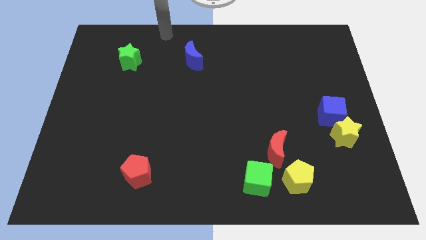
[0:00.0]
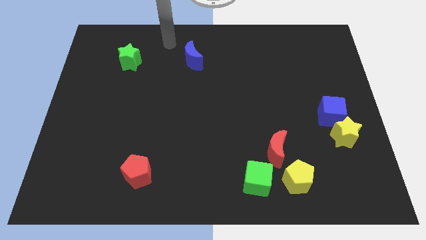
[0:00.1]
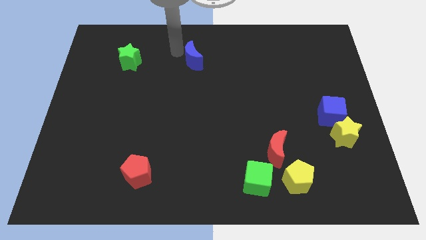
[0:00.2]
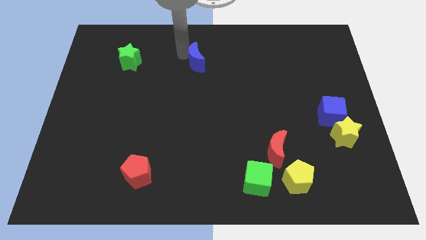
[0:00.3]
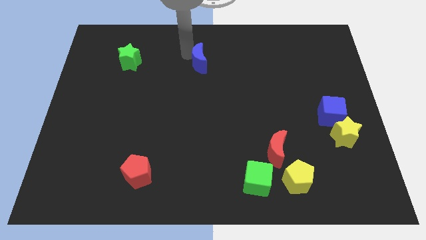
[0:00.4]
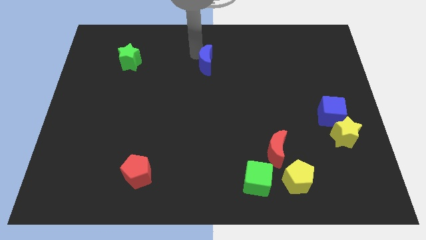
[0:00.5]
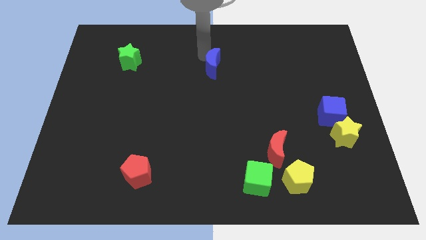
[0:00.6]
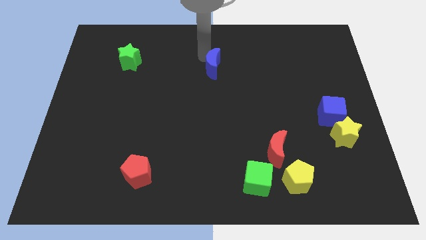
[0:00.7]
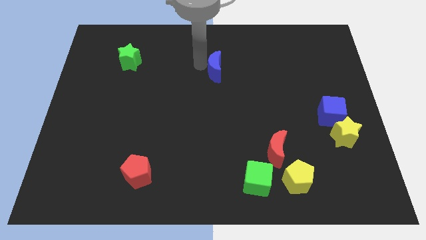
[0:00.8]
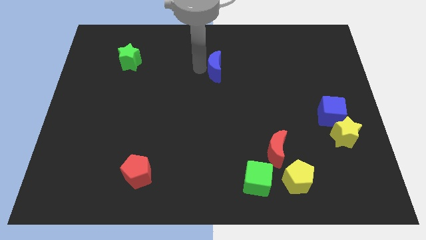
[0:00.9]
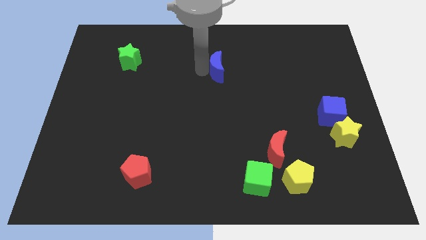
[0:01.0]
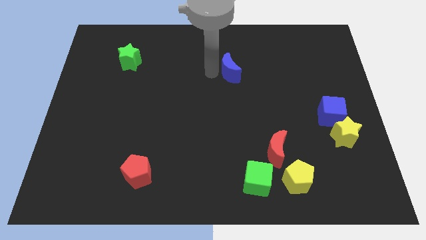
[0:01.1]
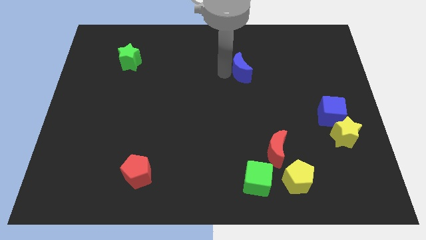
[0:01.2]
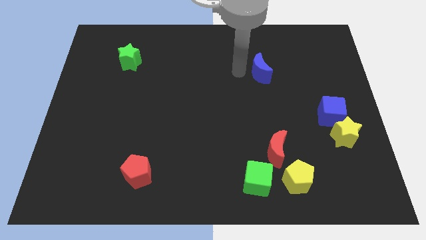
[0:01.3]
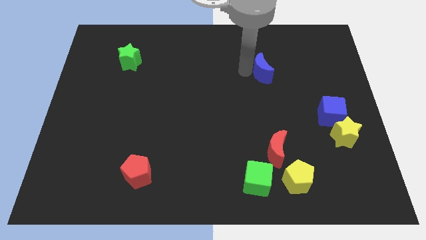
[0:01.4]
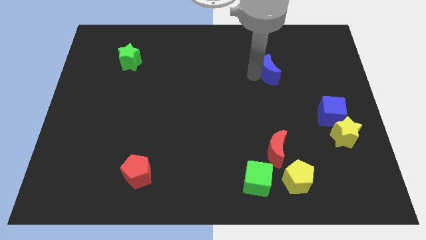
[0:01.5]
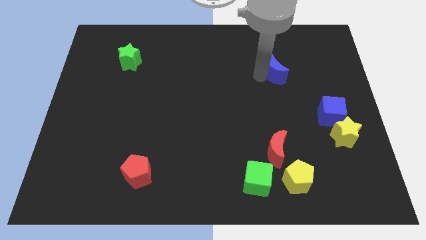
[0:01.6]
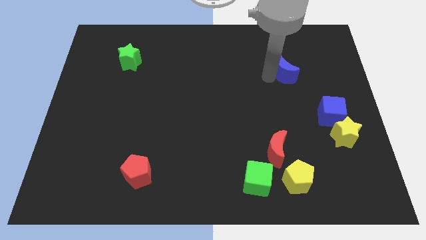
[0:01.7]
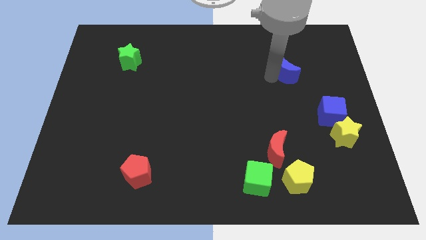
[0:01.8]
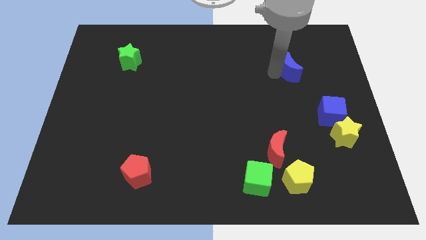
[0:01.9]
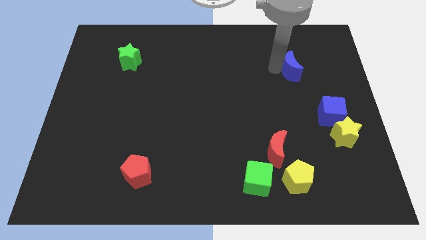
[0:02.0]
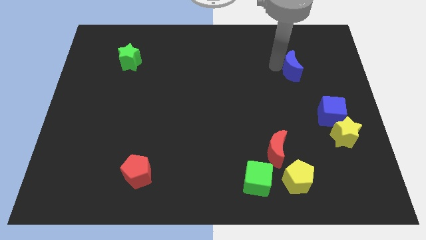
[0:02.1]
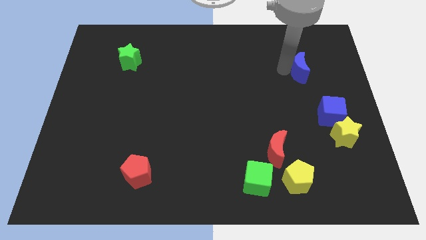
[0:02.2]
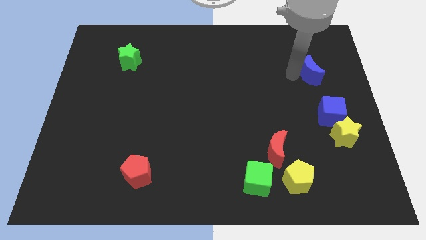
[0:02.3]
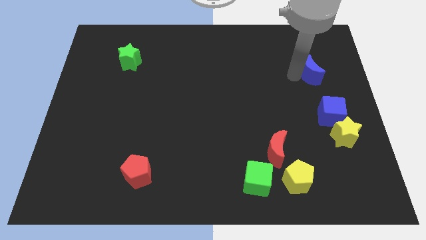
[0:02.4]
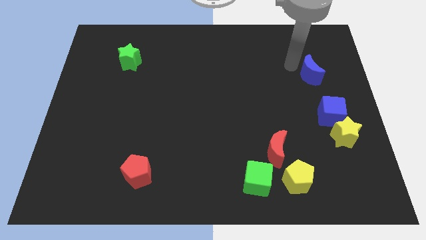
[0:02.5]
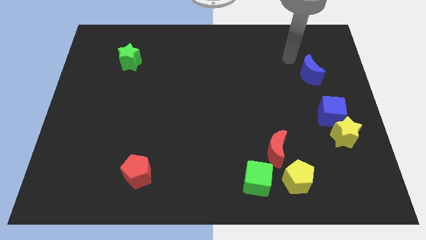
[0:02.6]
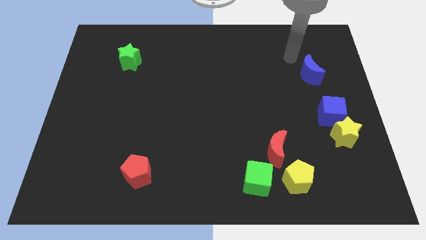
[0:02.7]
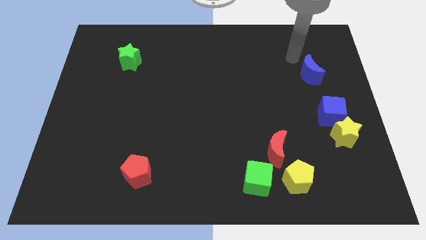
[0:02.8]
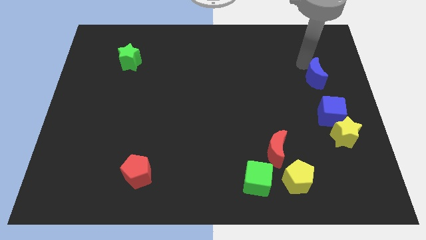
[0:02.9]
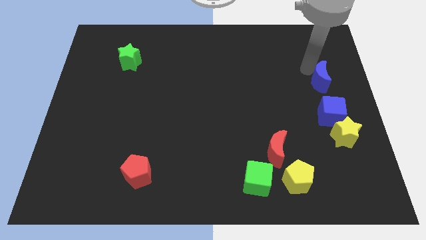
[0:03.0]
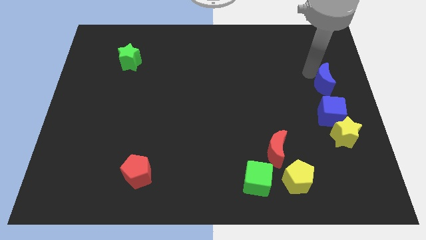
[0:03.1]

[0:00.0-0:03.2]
push the blue moon to the right side of the board

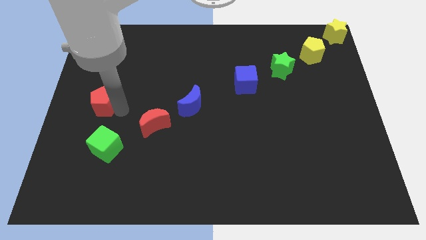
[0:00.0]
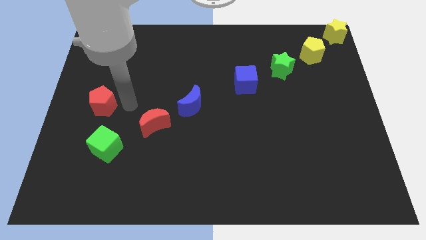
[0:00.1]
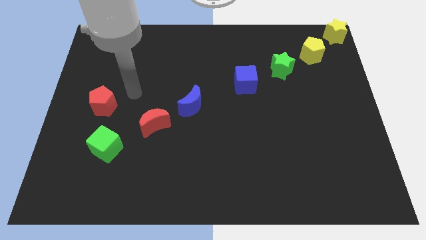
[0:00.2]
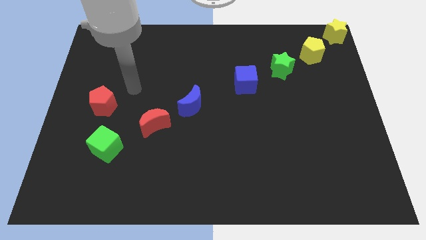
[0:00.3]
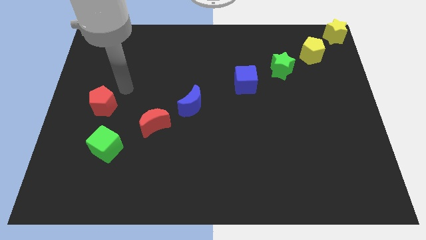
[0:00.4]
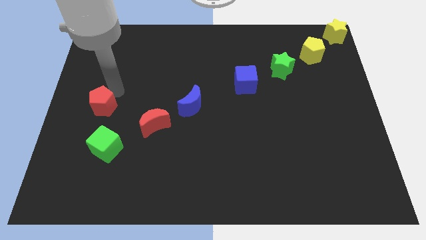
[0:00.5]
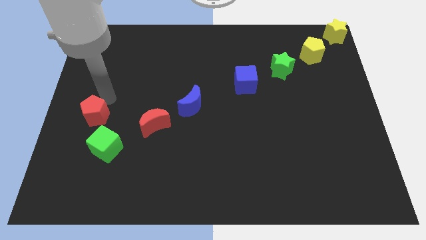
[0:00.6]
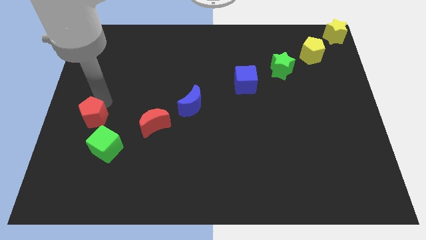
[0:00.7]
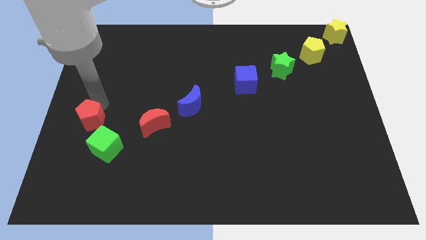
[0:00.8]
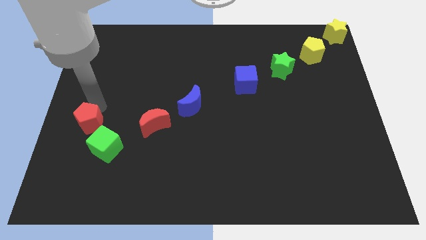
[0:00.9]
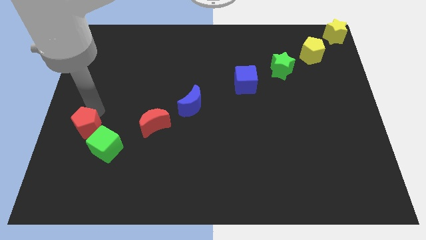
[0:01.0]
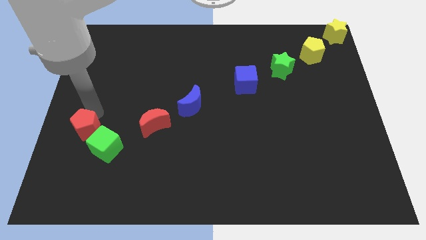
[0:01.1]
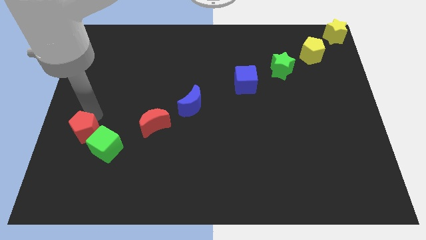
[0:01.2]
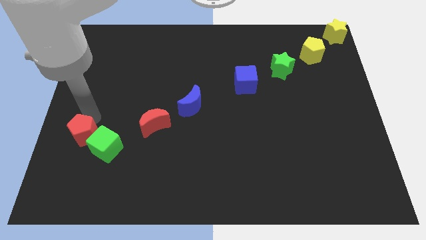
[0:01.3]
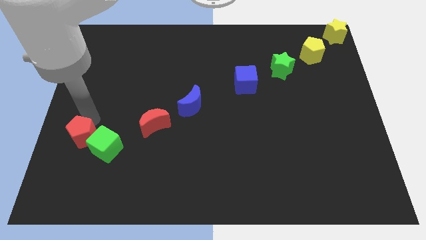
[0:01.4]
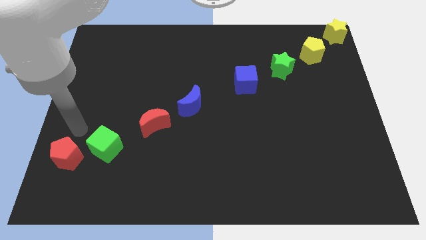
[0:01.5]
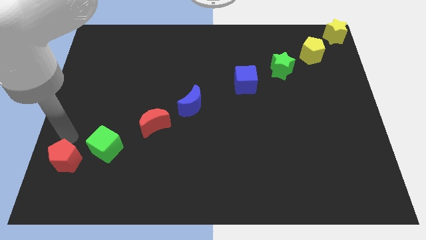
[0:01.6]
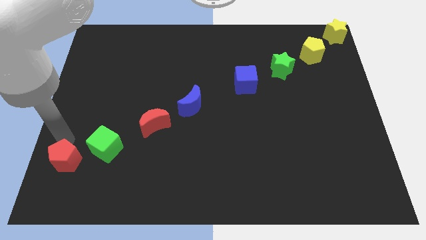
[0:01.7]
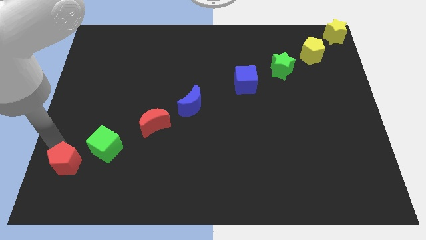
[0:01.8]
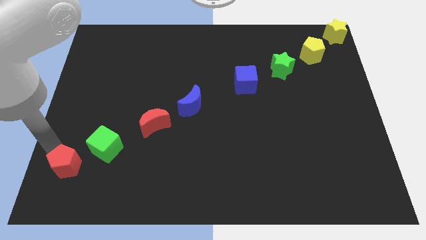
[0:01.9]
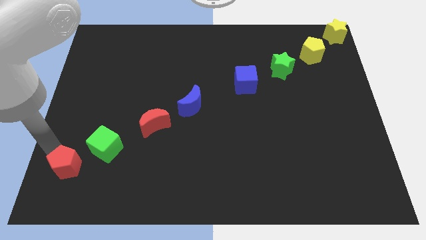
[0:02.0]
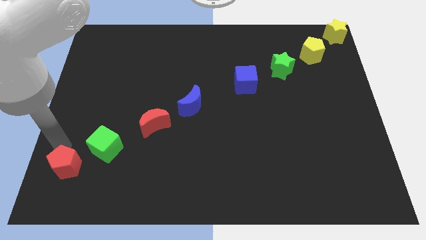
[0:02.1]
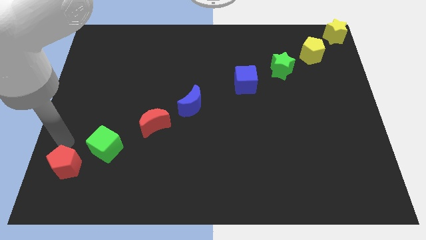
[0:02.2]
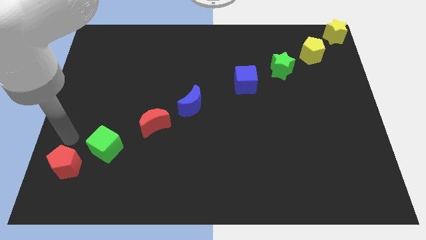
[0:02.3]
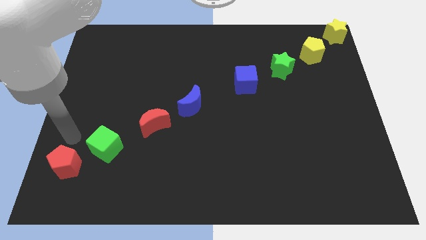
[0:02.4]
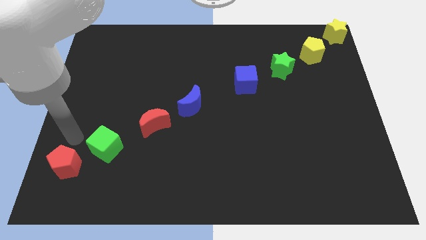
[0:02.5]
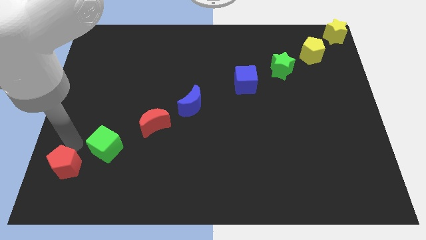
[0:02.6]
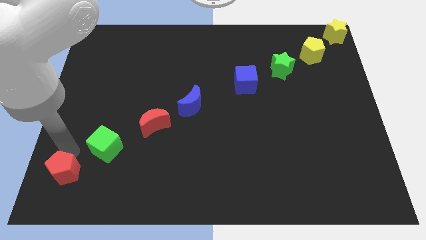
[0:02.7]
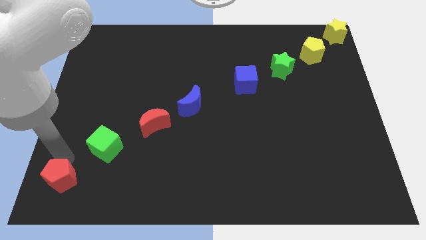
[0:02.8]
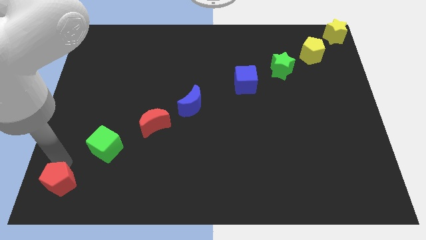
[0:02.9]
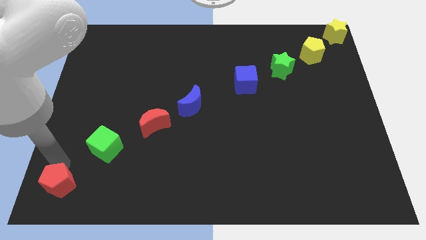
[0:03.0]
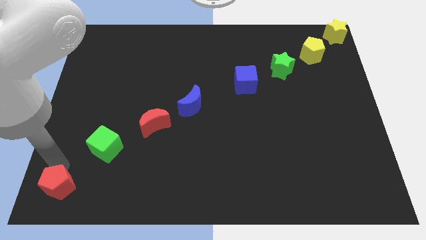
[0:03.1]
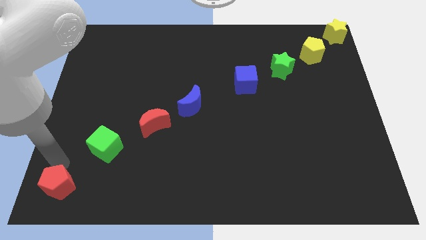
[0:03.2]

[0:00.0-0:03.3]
drag the red pentagon bottom left corner

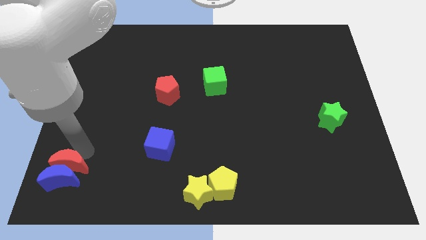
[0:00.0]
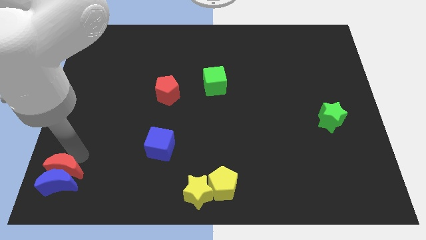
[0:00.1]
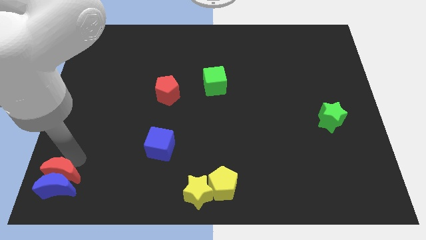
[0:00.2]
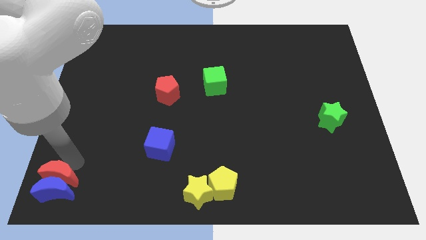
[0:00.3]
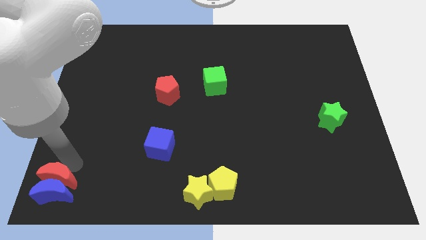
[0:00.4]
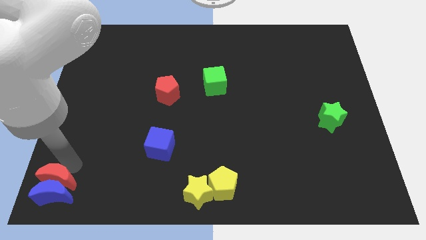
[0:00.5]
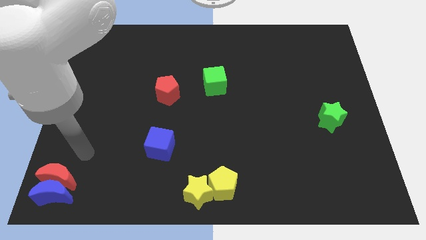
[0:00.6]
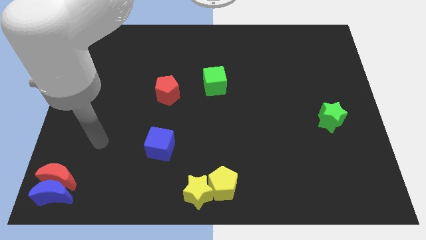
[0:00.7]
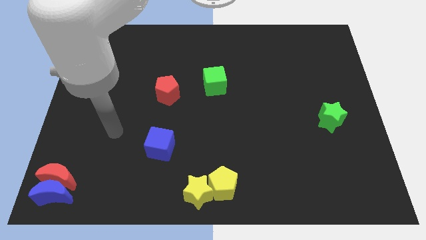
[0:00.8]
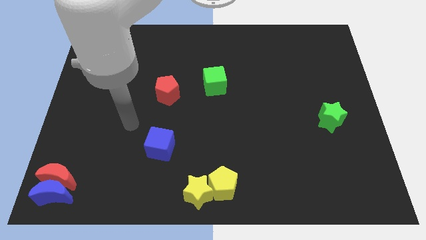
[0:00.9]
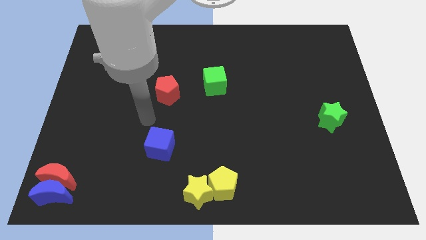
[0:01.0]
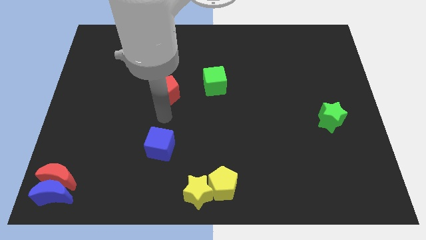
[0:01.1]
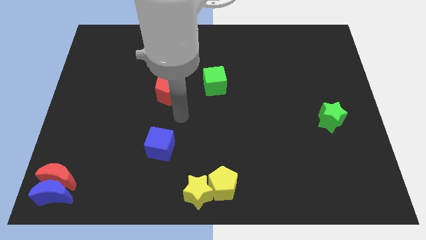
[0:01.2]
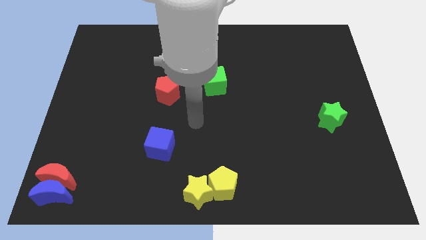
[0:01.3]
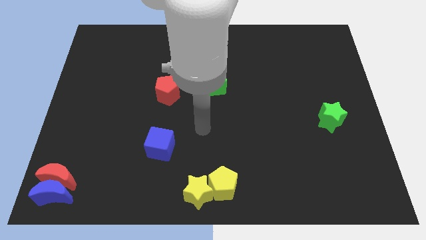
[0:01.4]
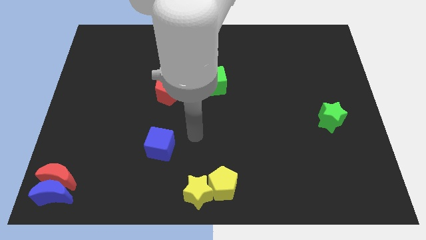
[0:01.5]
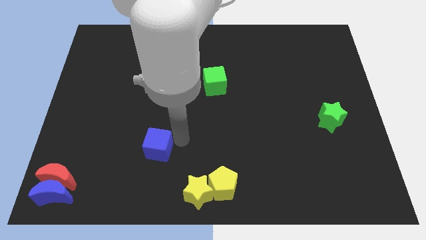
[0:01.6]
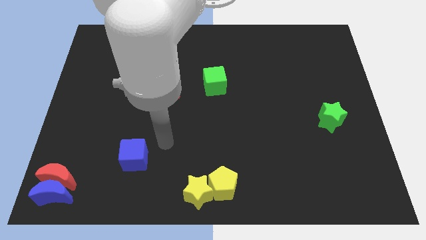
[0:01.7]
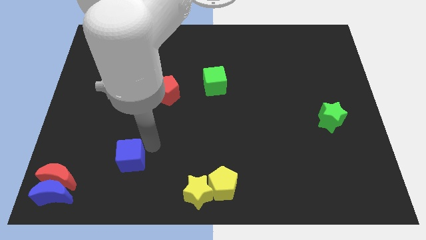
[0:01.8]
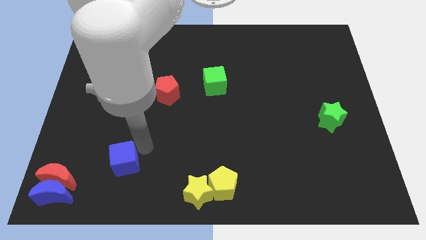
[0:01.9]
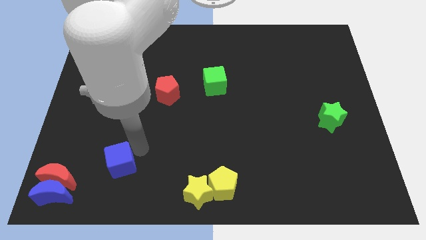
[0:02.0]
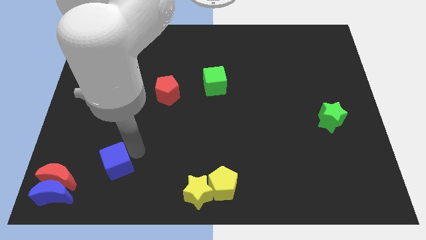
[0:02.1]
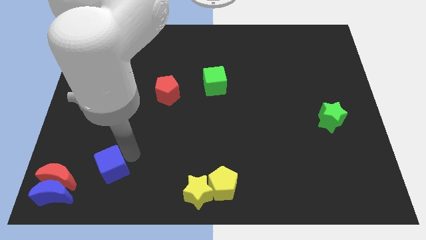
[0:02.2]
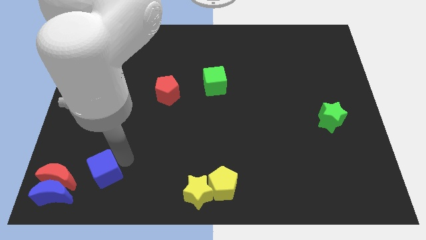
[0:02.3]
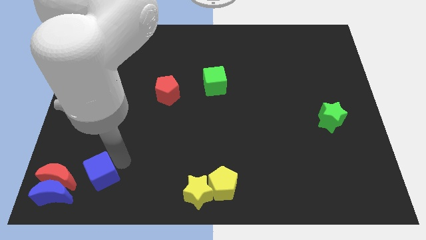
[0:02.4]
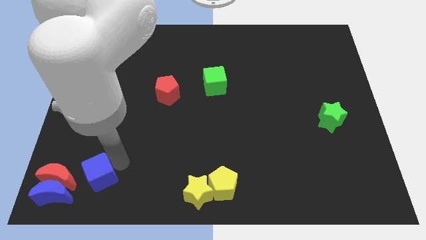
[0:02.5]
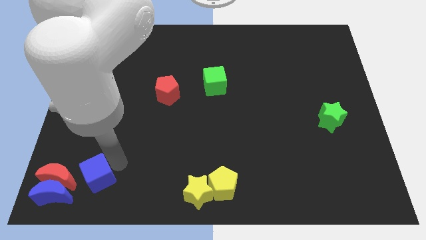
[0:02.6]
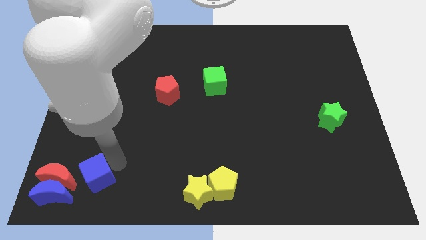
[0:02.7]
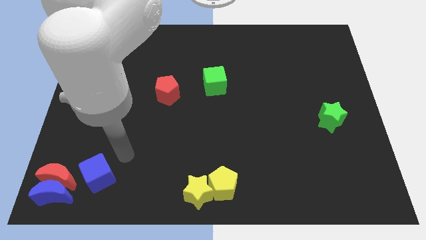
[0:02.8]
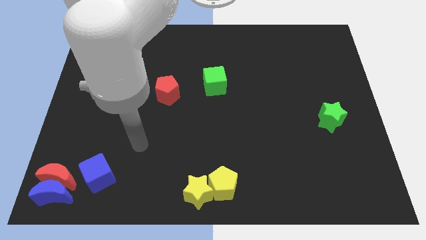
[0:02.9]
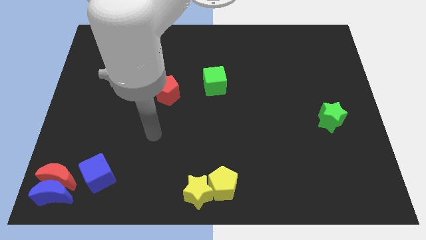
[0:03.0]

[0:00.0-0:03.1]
push blue cube beside red crescent
